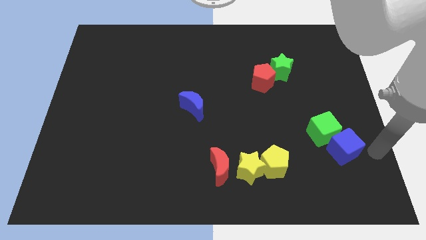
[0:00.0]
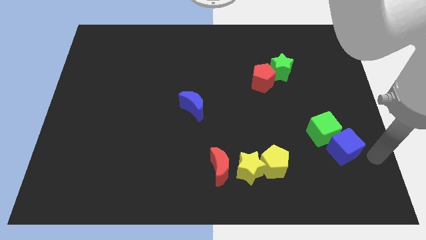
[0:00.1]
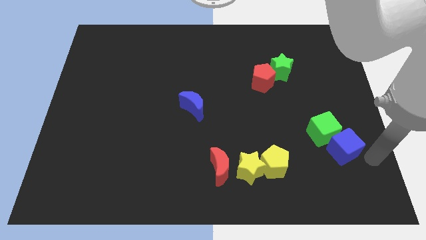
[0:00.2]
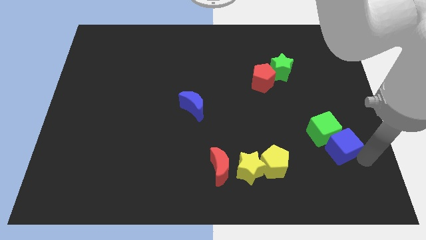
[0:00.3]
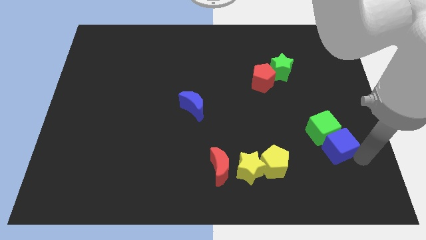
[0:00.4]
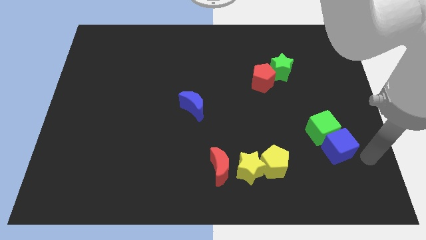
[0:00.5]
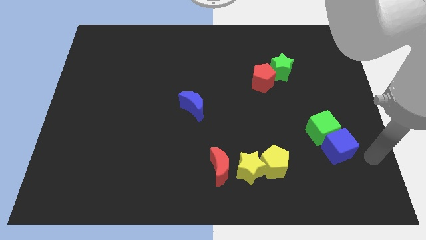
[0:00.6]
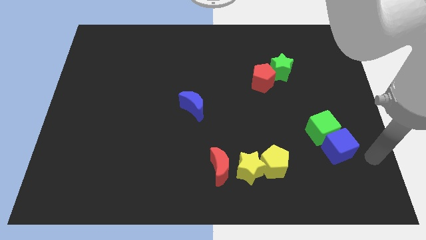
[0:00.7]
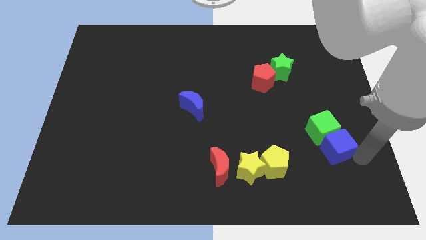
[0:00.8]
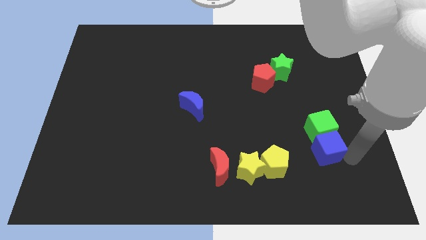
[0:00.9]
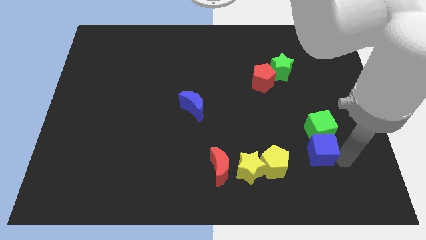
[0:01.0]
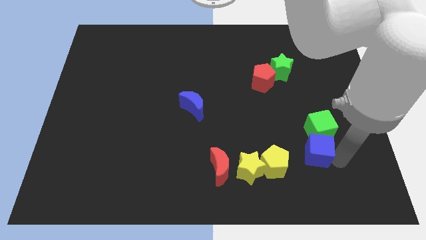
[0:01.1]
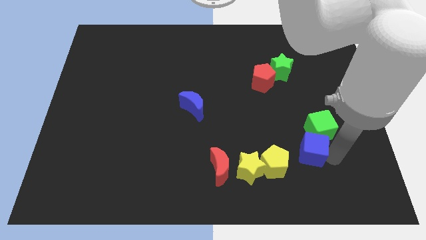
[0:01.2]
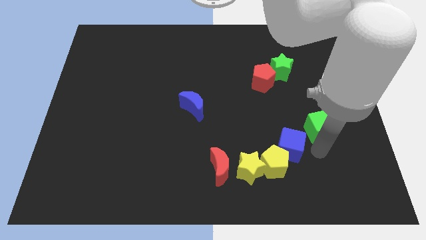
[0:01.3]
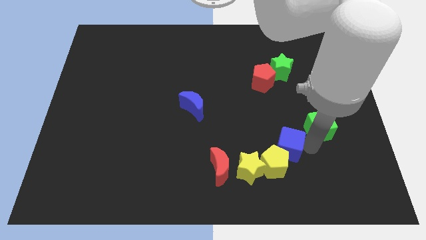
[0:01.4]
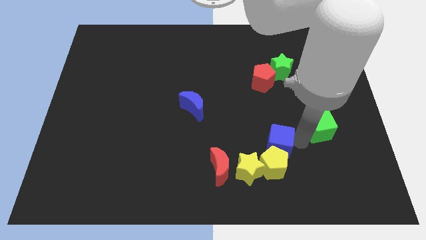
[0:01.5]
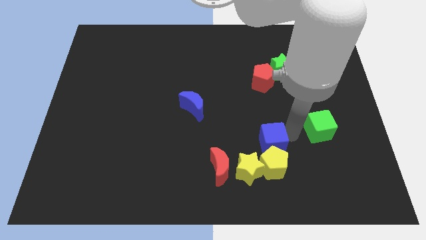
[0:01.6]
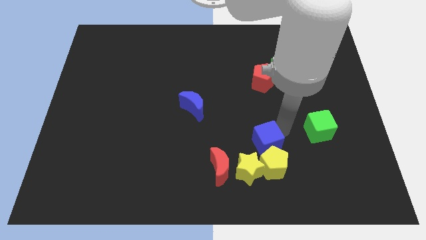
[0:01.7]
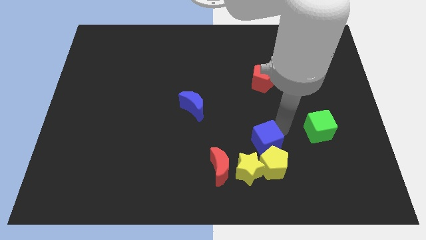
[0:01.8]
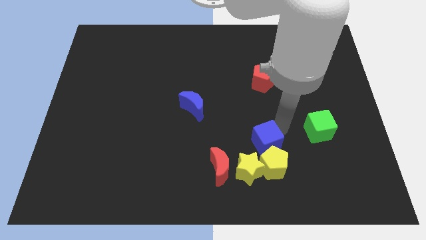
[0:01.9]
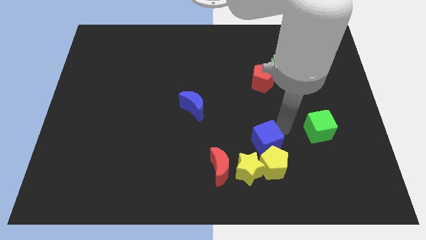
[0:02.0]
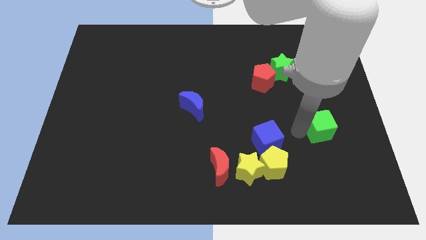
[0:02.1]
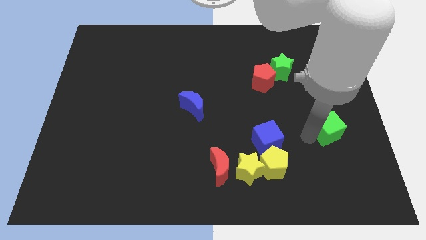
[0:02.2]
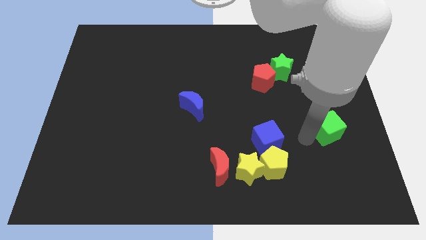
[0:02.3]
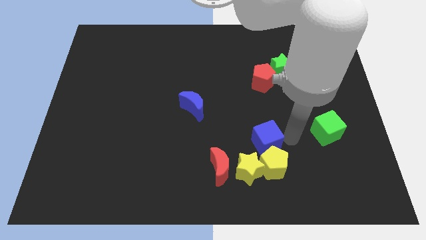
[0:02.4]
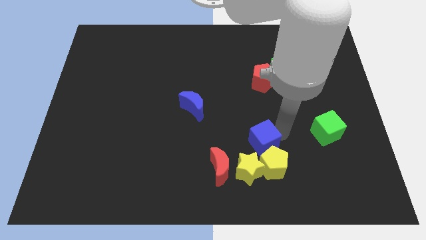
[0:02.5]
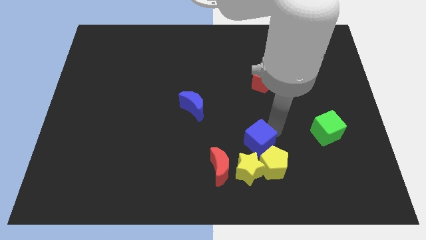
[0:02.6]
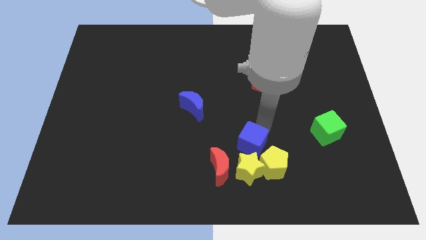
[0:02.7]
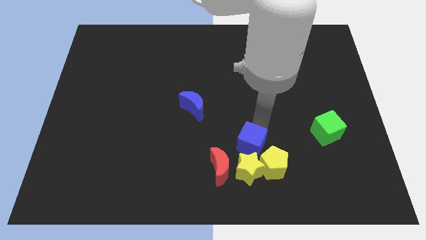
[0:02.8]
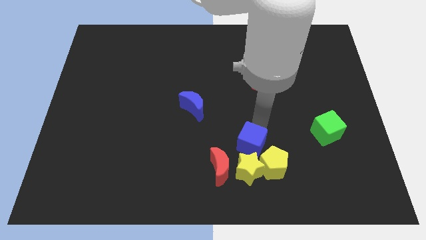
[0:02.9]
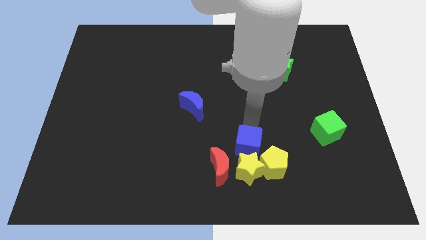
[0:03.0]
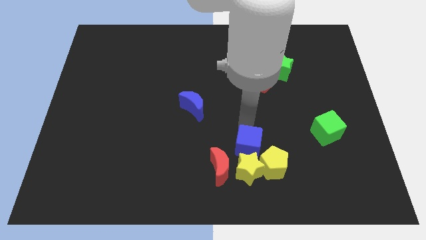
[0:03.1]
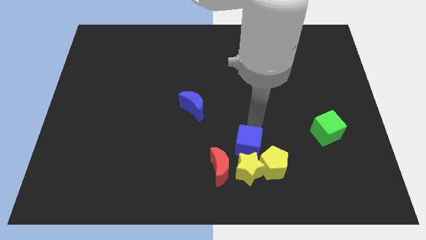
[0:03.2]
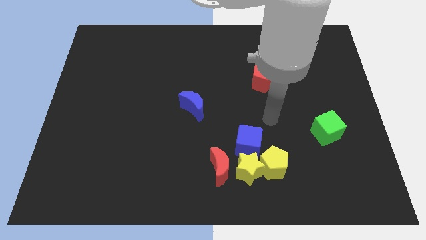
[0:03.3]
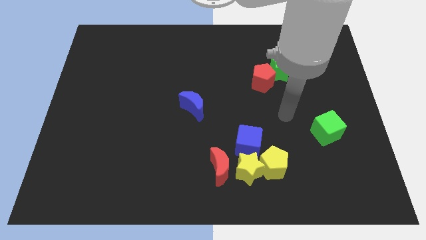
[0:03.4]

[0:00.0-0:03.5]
place the blue cube above the yellow star

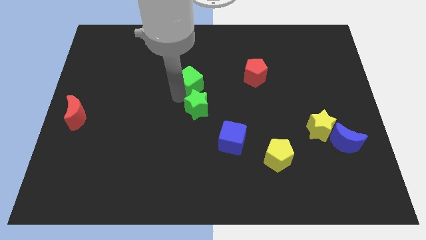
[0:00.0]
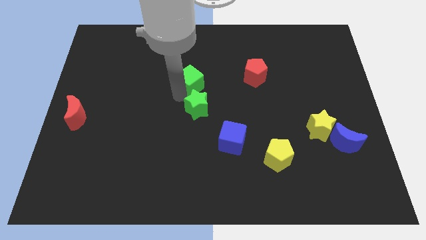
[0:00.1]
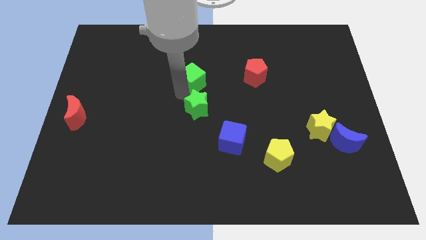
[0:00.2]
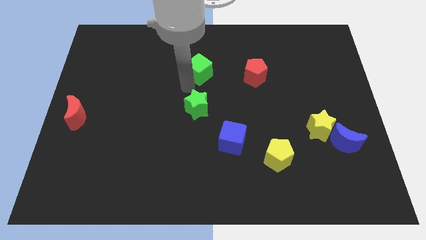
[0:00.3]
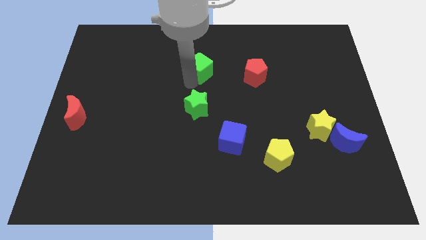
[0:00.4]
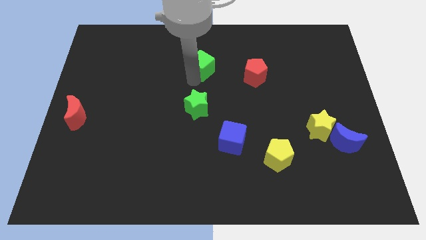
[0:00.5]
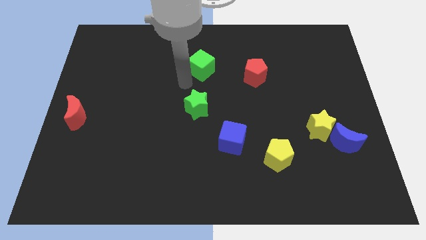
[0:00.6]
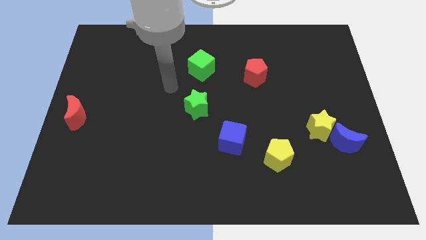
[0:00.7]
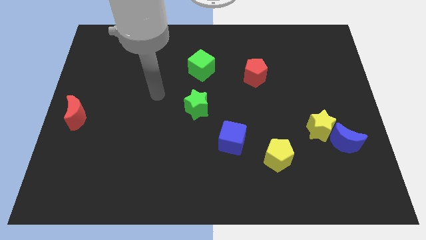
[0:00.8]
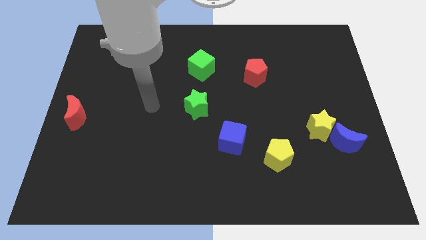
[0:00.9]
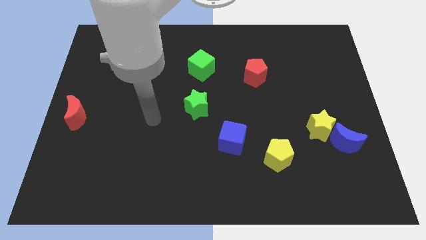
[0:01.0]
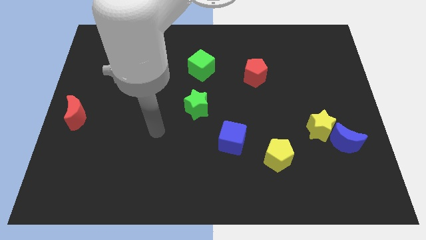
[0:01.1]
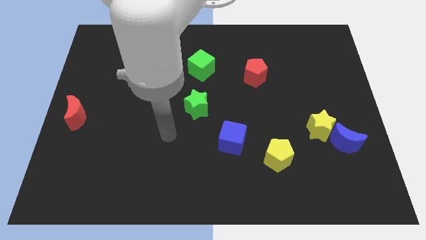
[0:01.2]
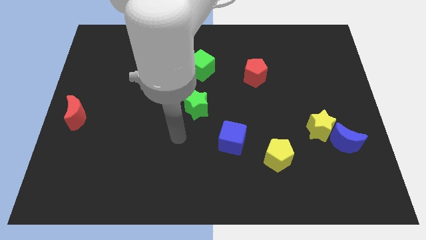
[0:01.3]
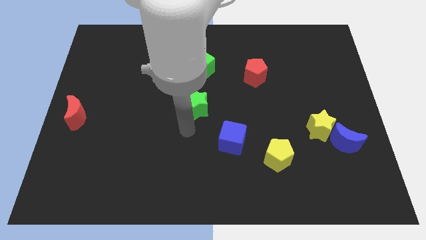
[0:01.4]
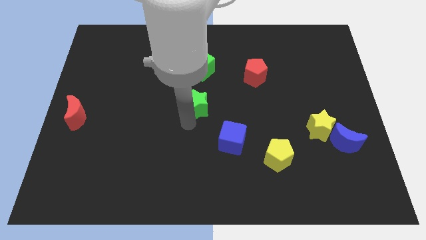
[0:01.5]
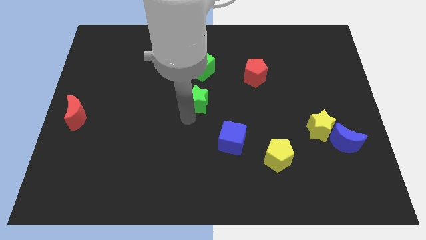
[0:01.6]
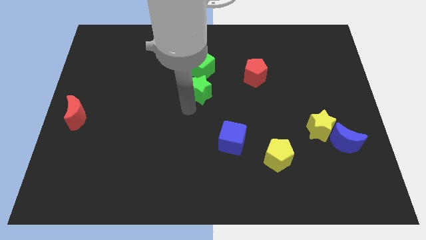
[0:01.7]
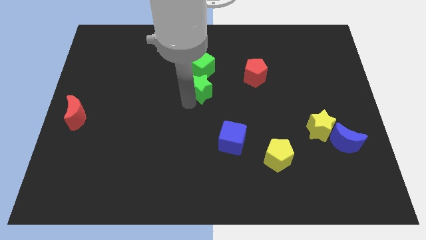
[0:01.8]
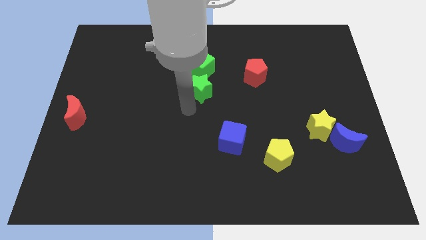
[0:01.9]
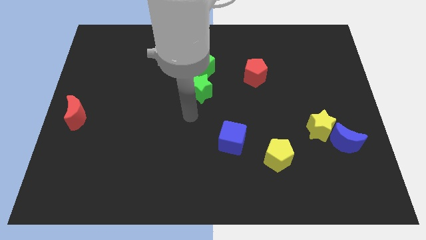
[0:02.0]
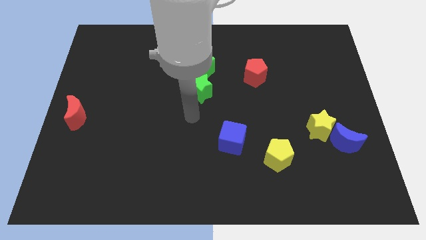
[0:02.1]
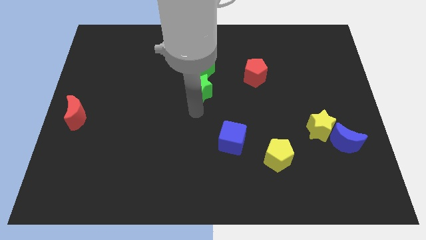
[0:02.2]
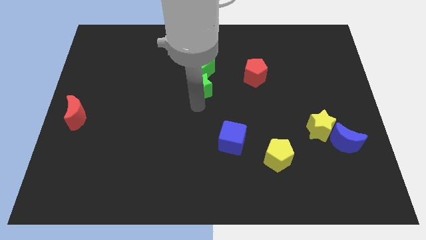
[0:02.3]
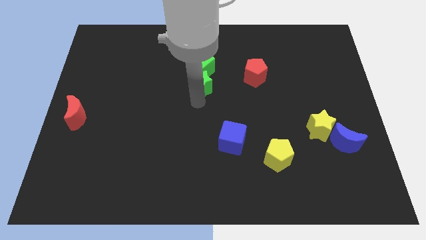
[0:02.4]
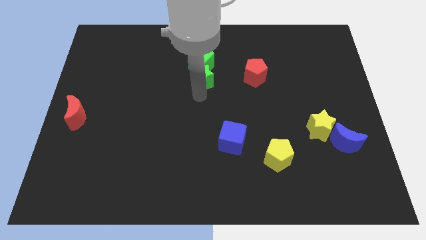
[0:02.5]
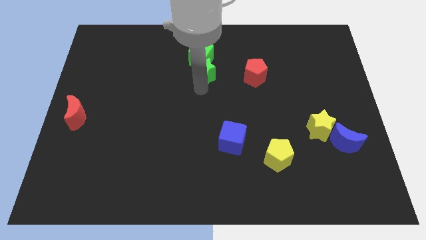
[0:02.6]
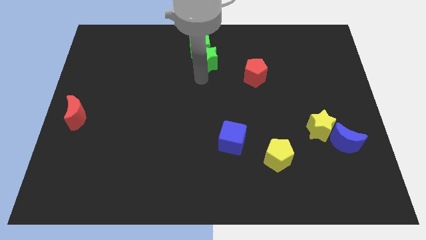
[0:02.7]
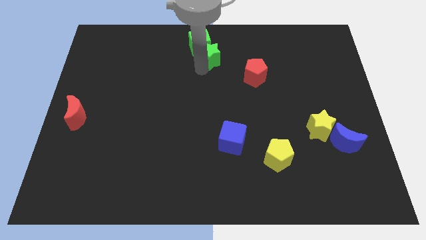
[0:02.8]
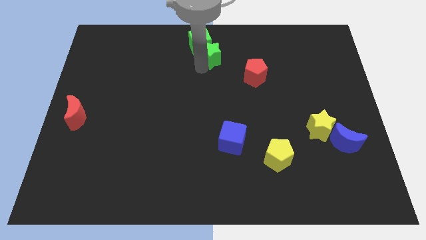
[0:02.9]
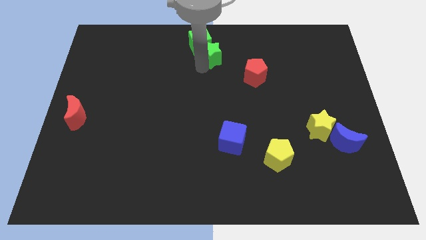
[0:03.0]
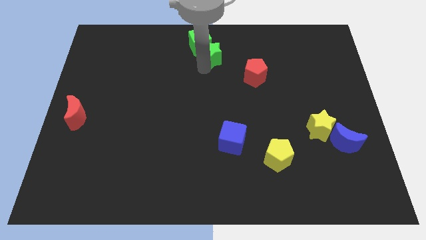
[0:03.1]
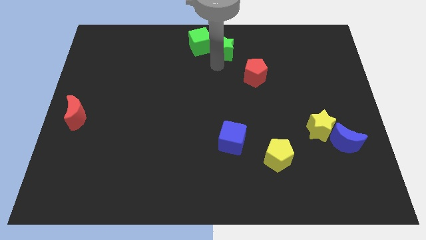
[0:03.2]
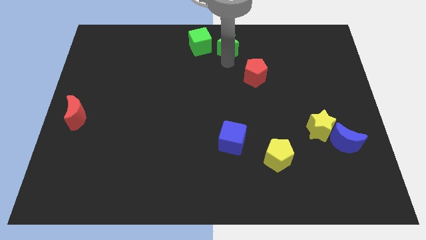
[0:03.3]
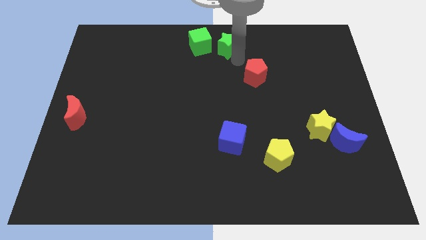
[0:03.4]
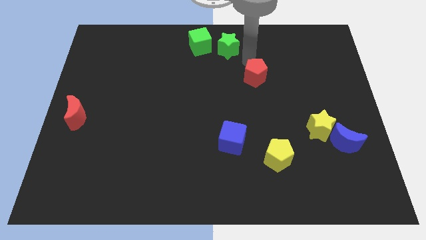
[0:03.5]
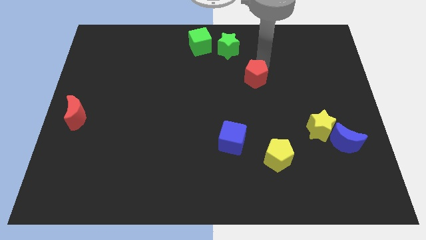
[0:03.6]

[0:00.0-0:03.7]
push the green cube and green star in a horizontal line at the top center of the board

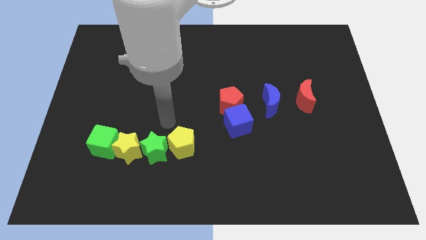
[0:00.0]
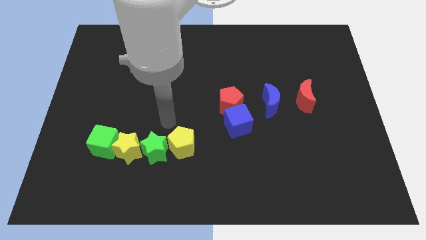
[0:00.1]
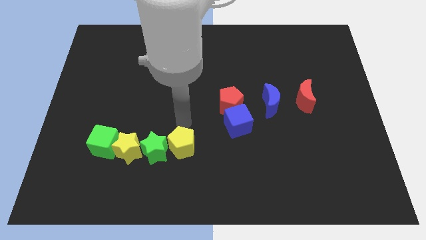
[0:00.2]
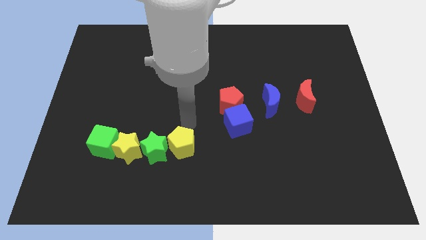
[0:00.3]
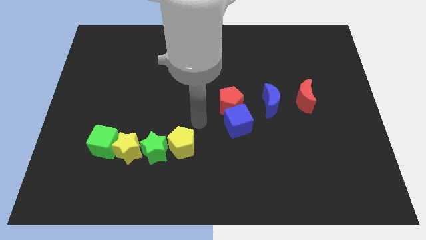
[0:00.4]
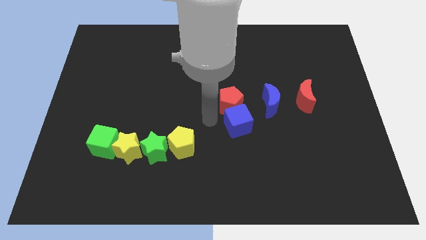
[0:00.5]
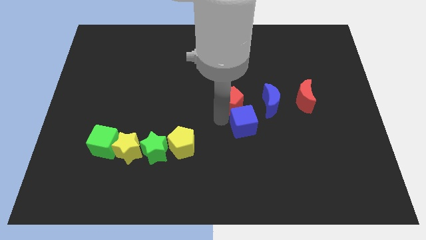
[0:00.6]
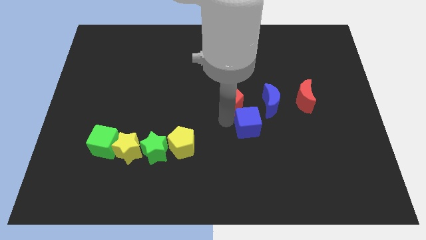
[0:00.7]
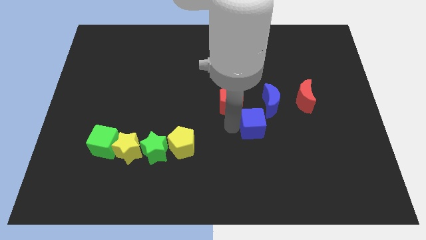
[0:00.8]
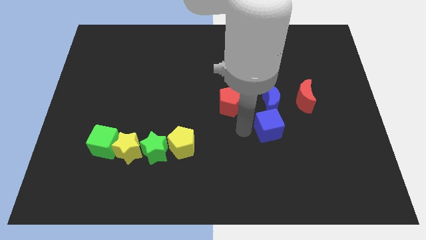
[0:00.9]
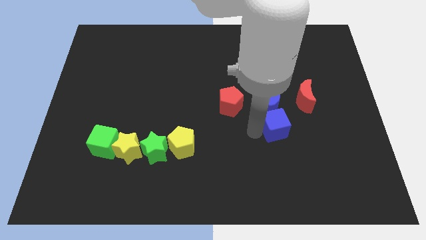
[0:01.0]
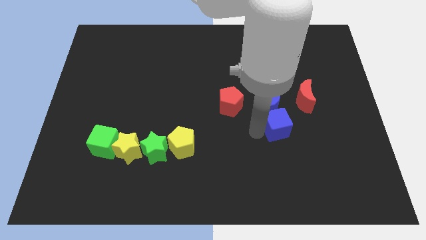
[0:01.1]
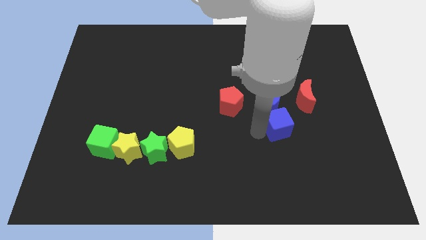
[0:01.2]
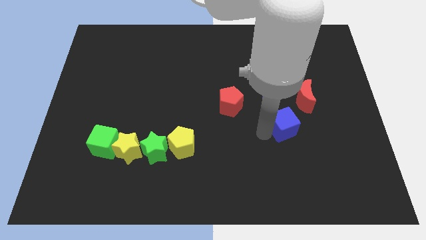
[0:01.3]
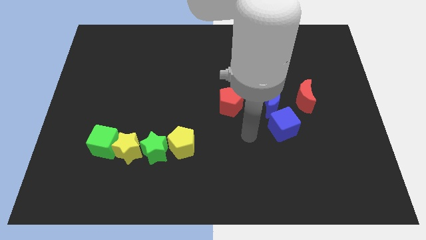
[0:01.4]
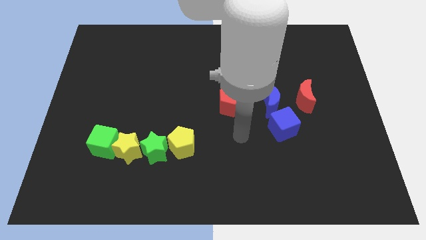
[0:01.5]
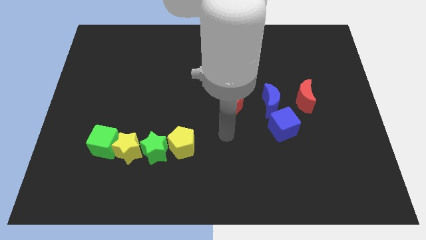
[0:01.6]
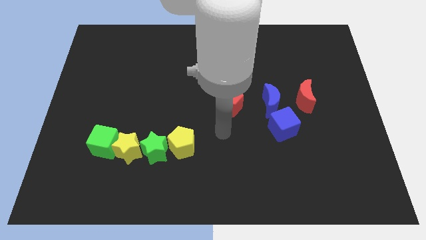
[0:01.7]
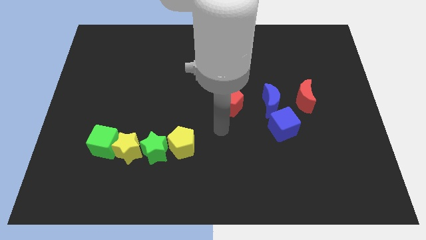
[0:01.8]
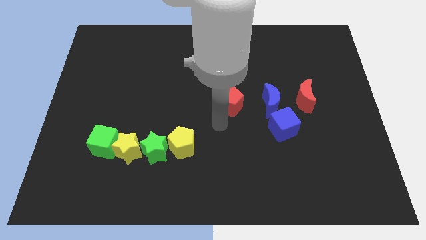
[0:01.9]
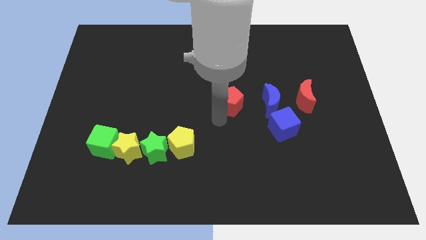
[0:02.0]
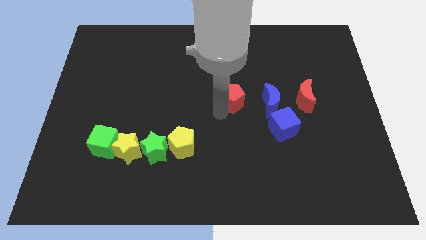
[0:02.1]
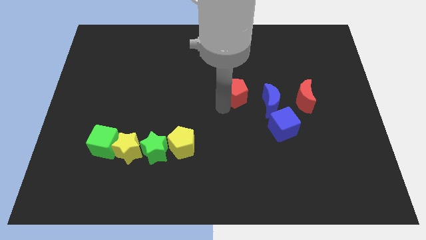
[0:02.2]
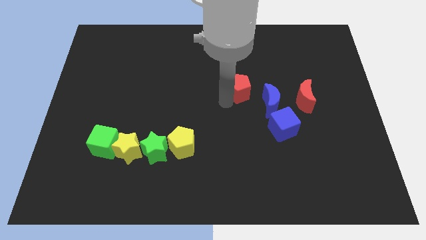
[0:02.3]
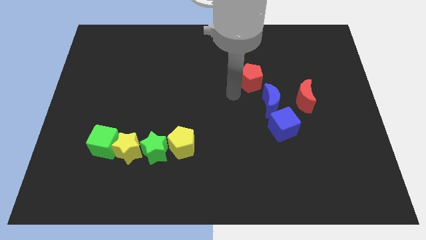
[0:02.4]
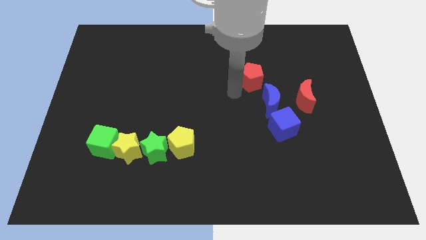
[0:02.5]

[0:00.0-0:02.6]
separate blue cube red pentagon
